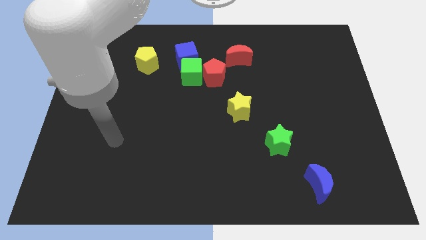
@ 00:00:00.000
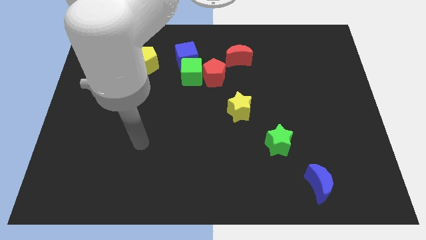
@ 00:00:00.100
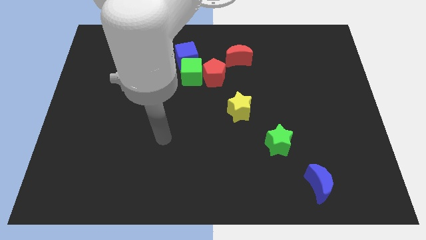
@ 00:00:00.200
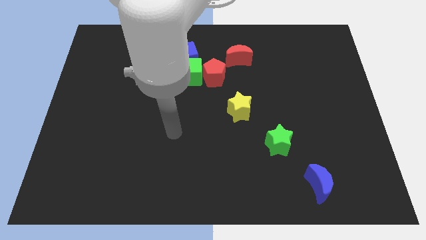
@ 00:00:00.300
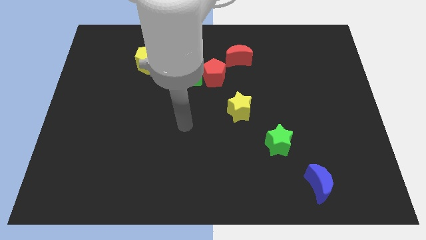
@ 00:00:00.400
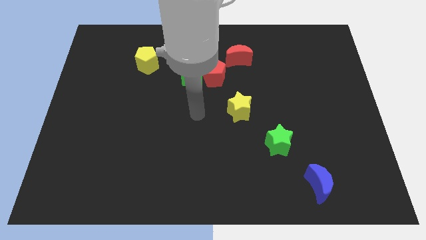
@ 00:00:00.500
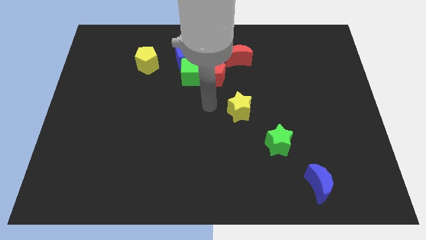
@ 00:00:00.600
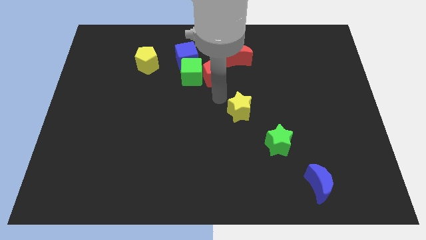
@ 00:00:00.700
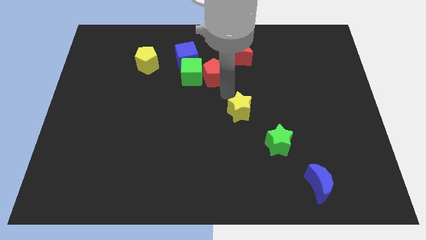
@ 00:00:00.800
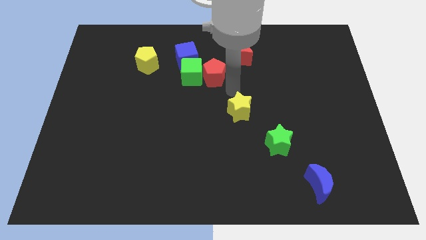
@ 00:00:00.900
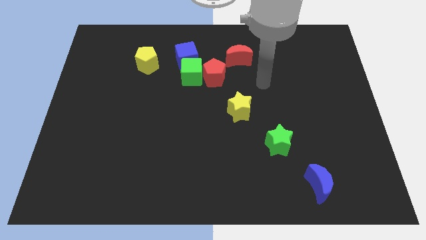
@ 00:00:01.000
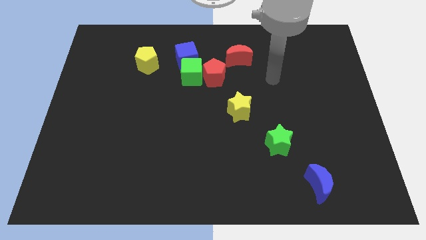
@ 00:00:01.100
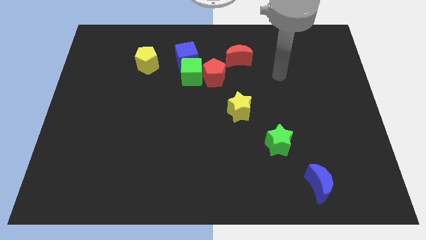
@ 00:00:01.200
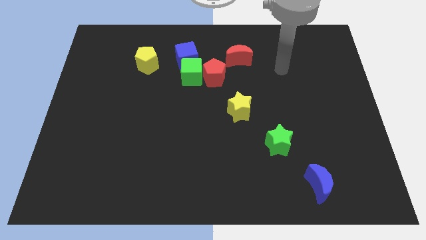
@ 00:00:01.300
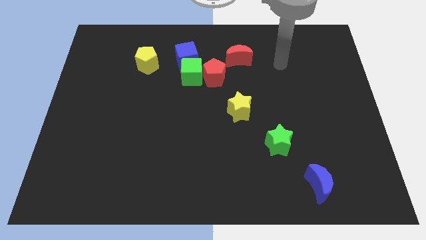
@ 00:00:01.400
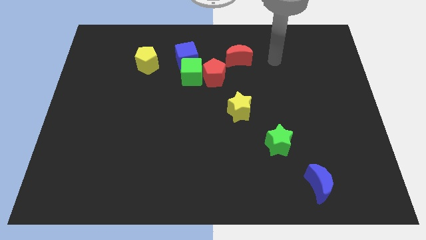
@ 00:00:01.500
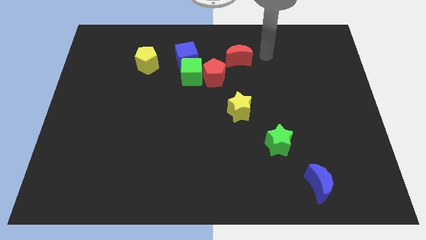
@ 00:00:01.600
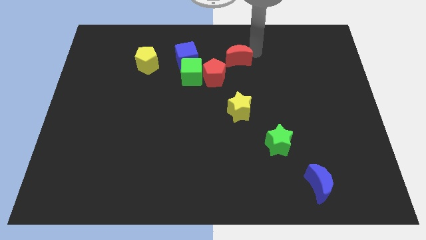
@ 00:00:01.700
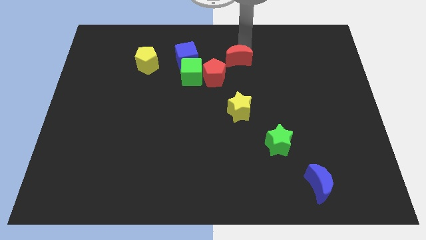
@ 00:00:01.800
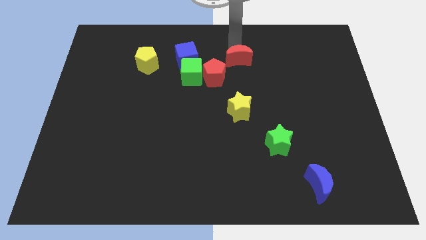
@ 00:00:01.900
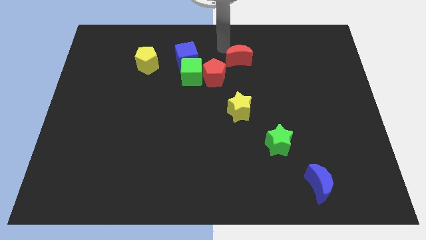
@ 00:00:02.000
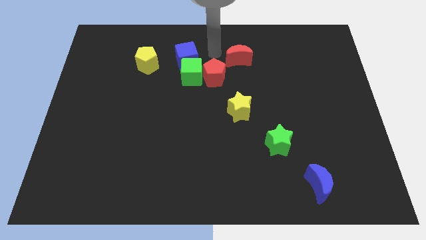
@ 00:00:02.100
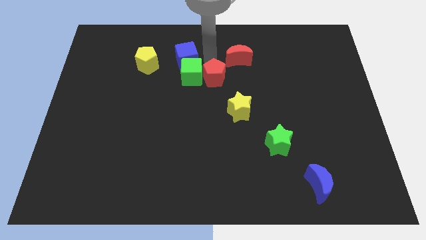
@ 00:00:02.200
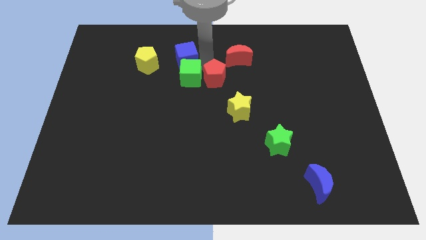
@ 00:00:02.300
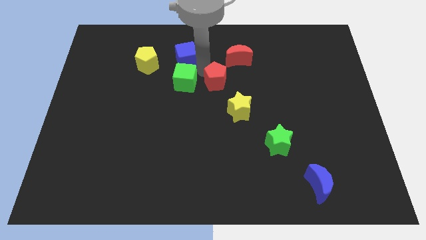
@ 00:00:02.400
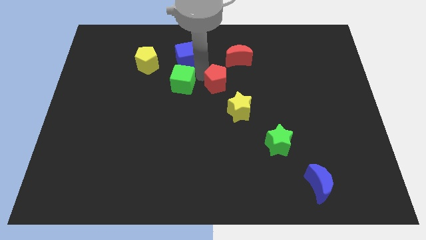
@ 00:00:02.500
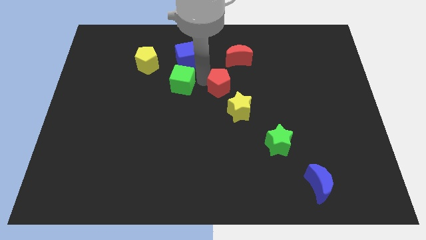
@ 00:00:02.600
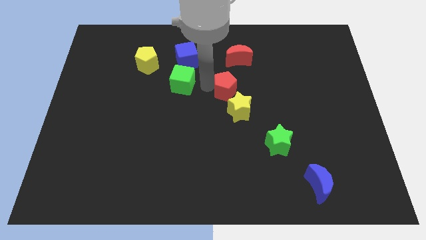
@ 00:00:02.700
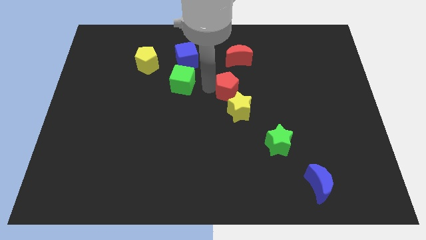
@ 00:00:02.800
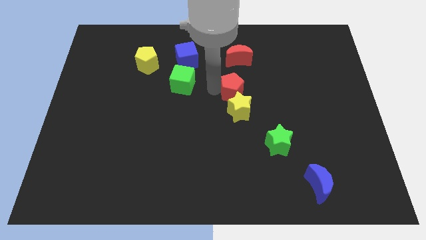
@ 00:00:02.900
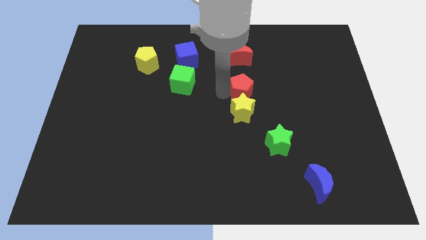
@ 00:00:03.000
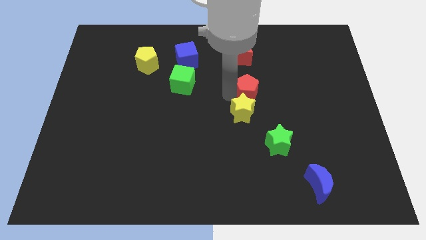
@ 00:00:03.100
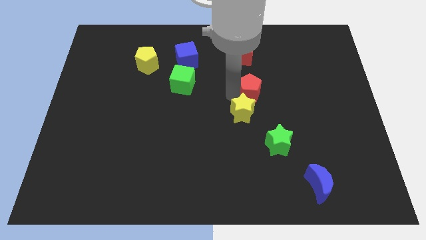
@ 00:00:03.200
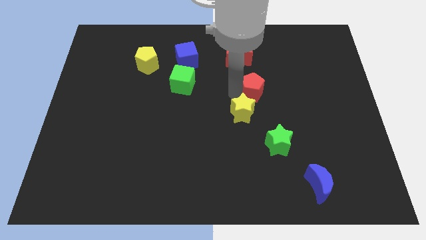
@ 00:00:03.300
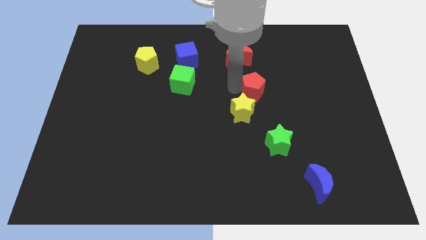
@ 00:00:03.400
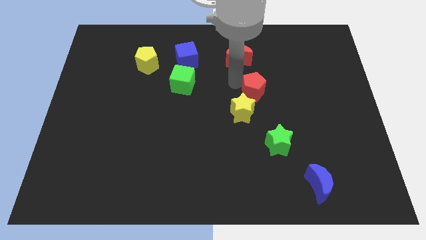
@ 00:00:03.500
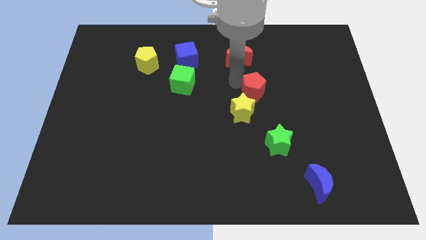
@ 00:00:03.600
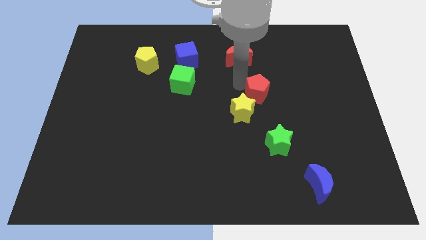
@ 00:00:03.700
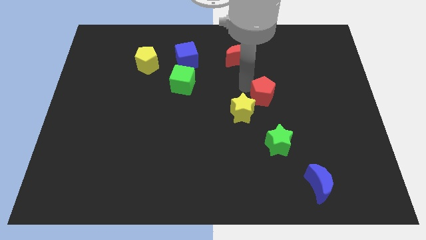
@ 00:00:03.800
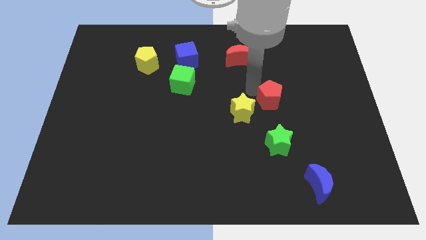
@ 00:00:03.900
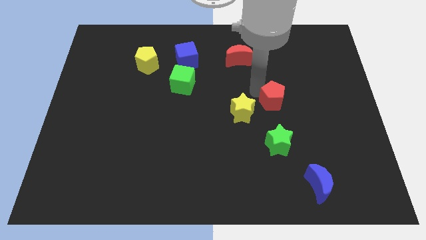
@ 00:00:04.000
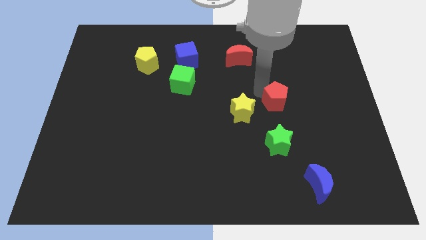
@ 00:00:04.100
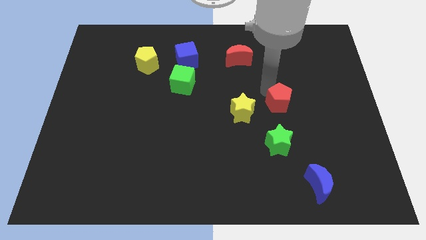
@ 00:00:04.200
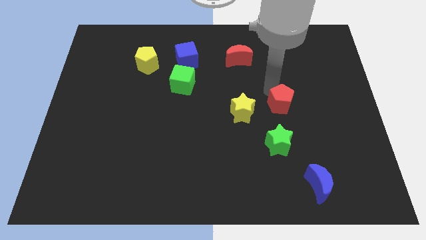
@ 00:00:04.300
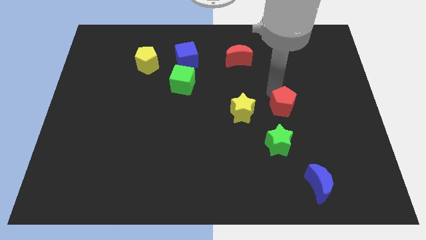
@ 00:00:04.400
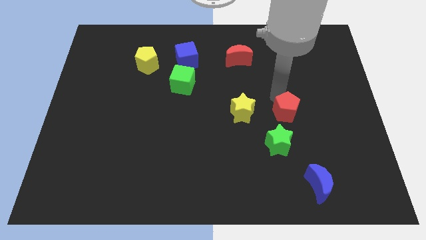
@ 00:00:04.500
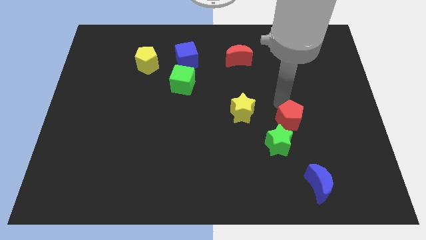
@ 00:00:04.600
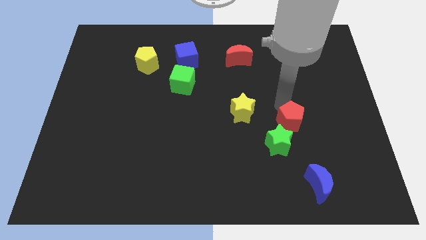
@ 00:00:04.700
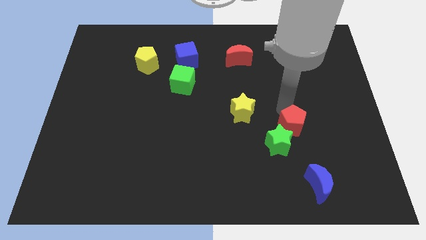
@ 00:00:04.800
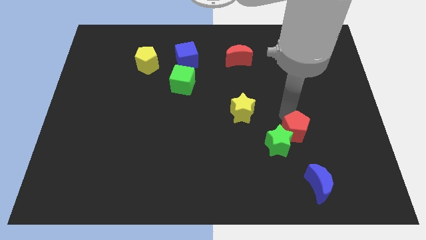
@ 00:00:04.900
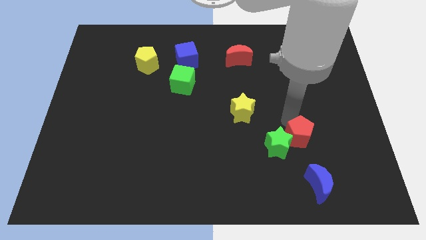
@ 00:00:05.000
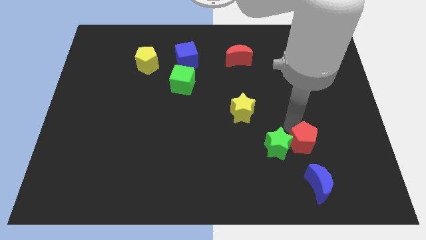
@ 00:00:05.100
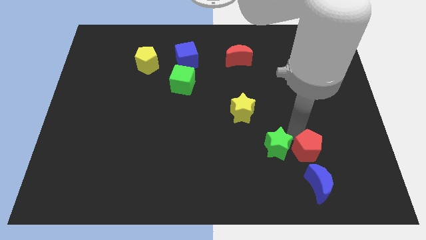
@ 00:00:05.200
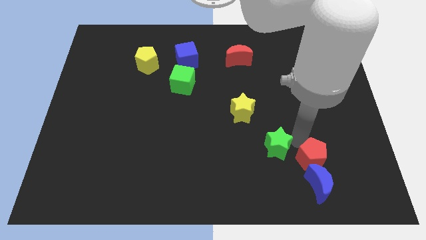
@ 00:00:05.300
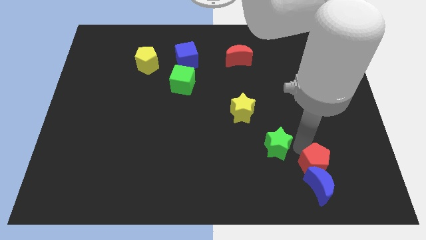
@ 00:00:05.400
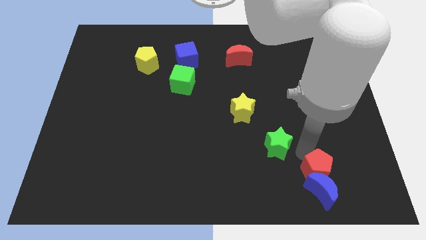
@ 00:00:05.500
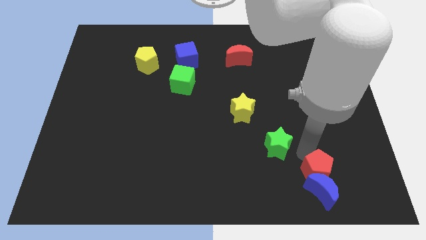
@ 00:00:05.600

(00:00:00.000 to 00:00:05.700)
push the red pentagon next to the blue moon

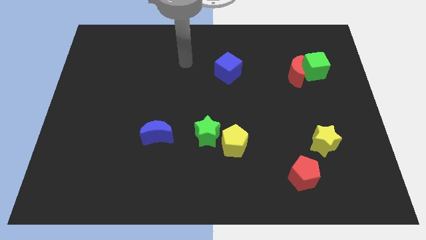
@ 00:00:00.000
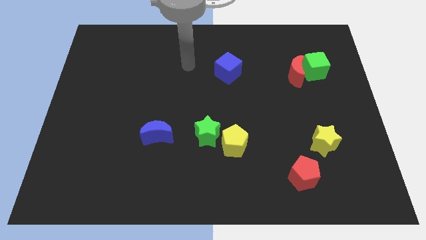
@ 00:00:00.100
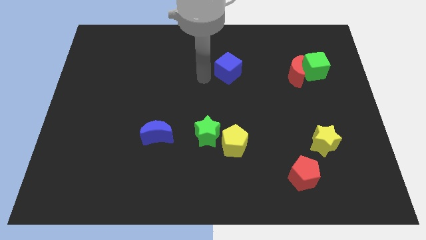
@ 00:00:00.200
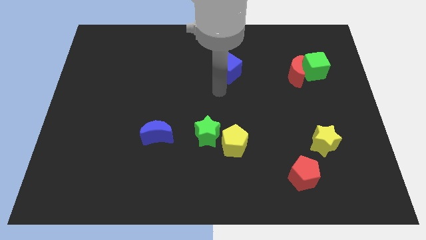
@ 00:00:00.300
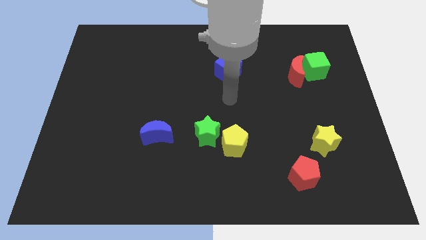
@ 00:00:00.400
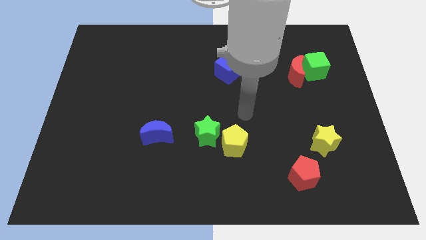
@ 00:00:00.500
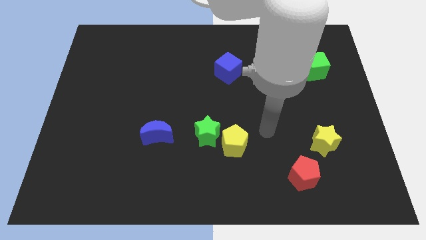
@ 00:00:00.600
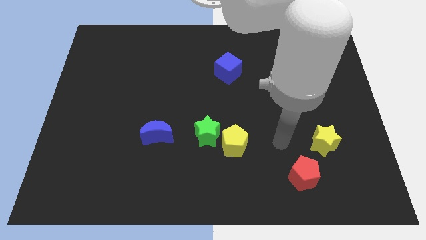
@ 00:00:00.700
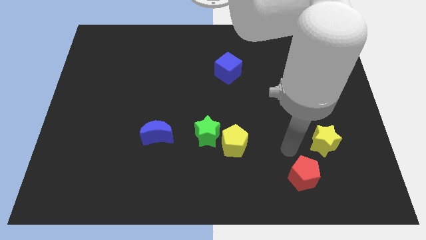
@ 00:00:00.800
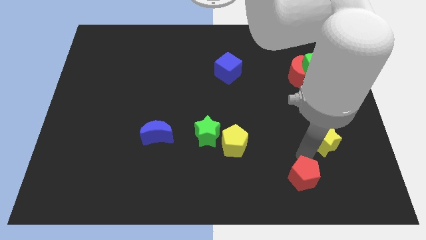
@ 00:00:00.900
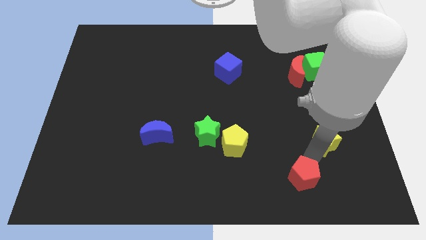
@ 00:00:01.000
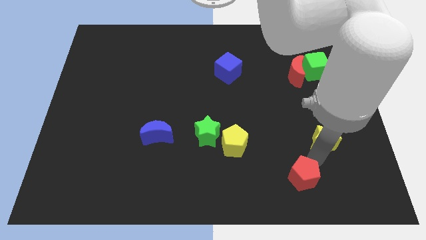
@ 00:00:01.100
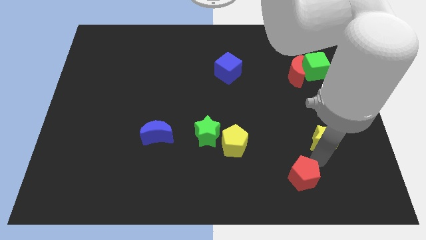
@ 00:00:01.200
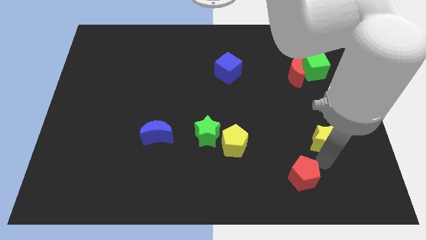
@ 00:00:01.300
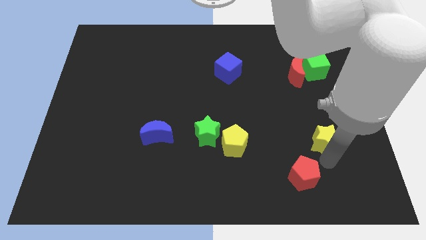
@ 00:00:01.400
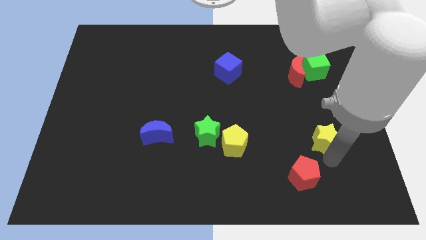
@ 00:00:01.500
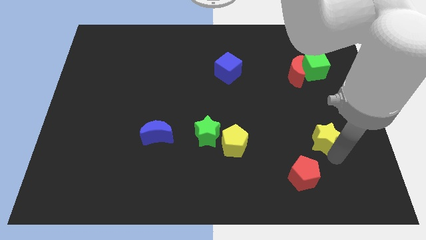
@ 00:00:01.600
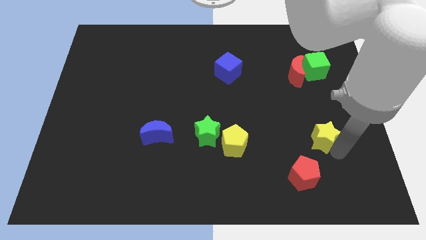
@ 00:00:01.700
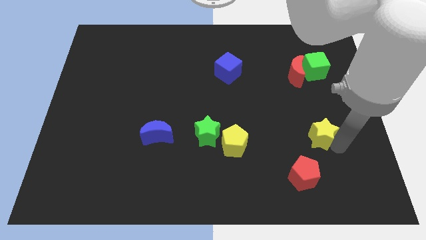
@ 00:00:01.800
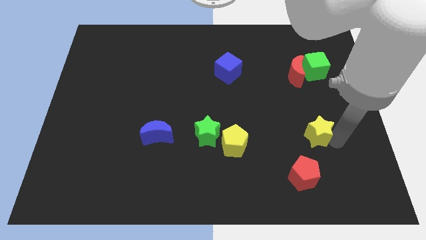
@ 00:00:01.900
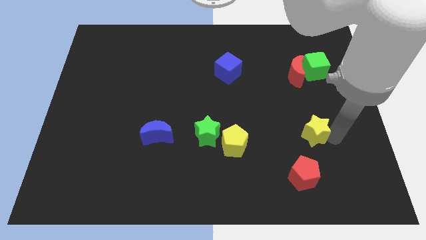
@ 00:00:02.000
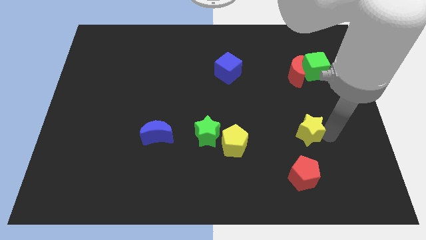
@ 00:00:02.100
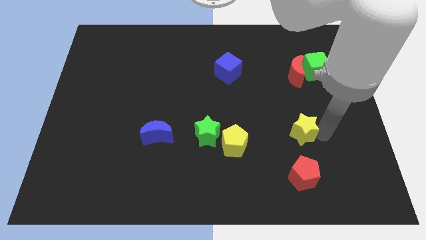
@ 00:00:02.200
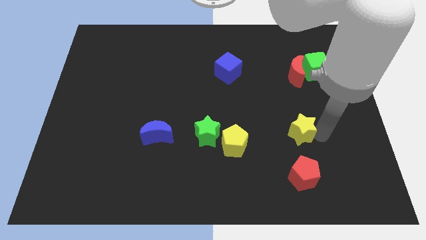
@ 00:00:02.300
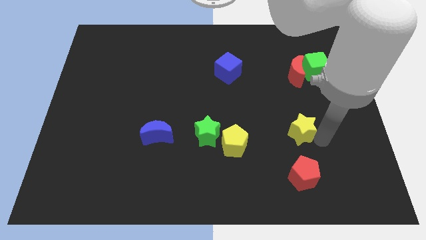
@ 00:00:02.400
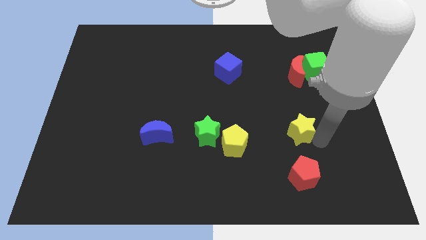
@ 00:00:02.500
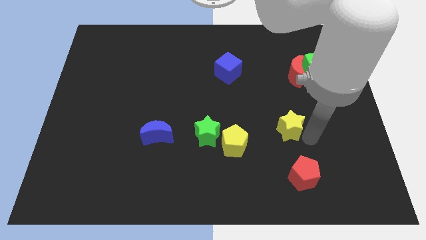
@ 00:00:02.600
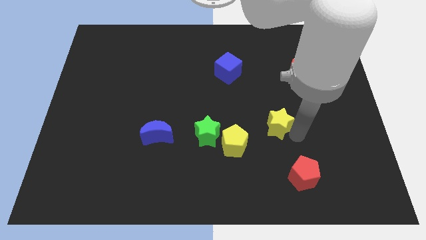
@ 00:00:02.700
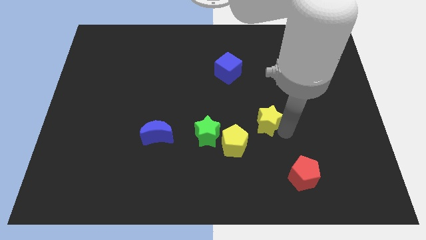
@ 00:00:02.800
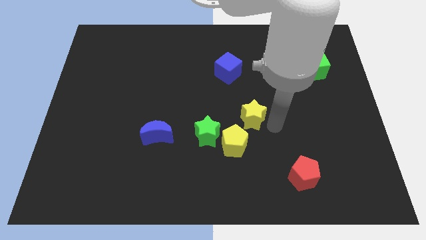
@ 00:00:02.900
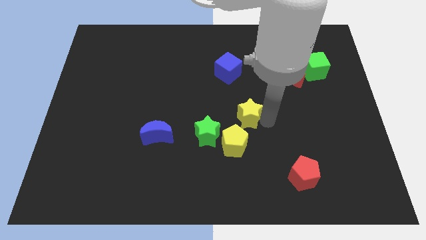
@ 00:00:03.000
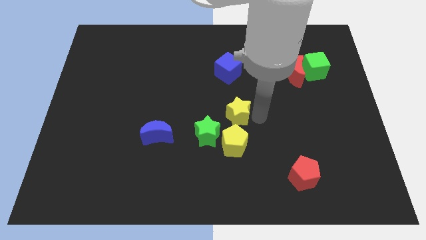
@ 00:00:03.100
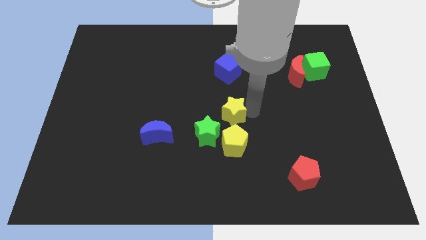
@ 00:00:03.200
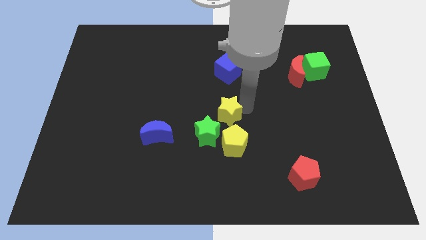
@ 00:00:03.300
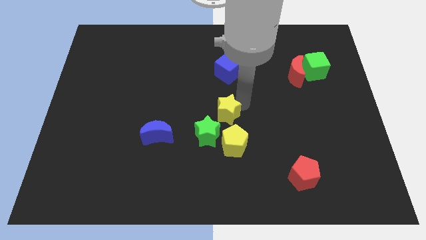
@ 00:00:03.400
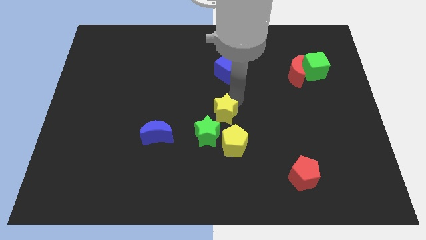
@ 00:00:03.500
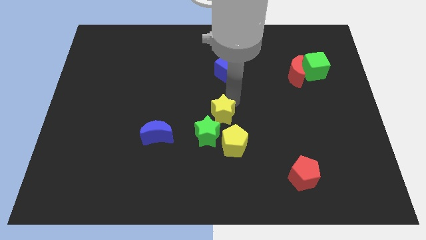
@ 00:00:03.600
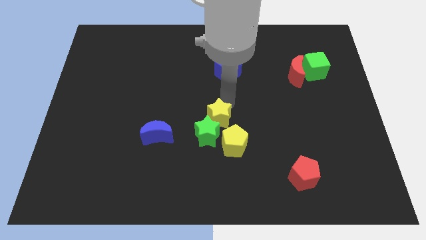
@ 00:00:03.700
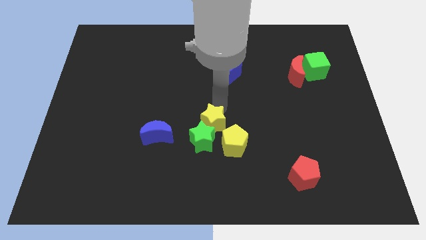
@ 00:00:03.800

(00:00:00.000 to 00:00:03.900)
put the yellow star close to the green star
